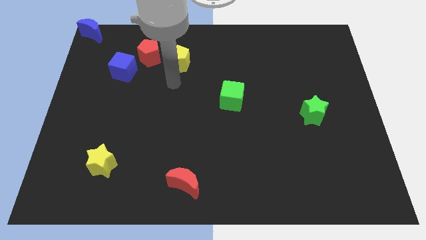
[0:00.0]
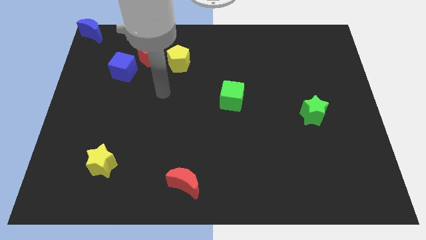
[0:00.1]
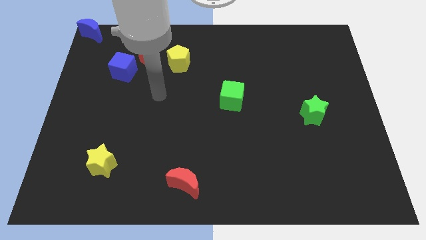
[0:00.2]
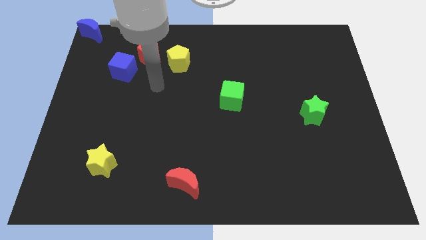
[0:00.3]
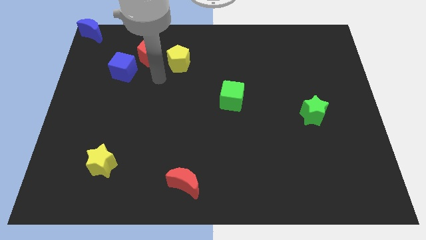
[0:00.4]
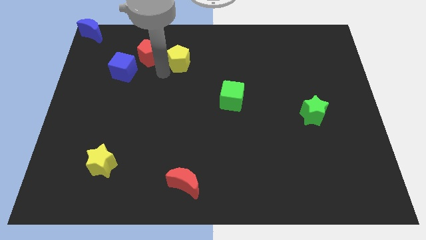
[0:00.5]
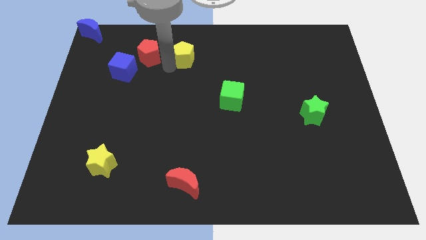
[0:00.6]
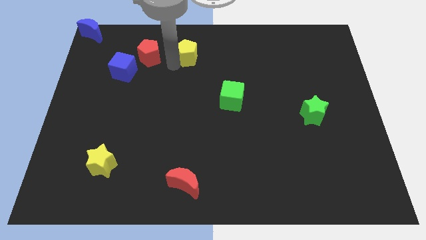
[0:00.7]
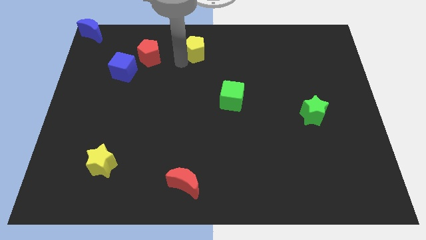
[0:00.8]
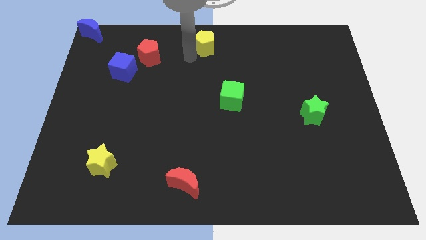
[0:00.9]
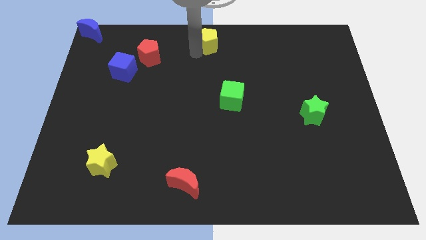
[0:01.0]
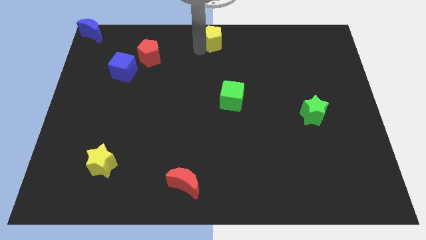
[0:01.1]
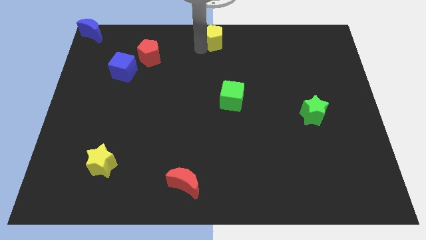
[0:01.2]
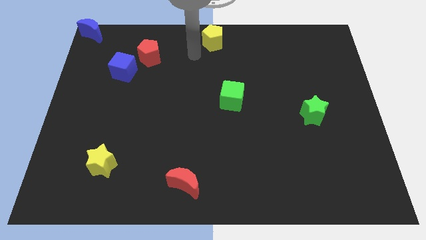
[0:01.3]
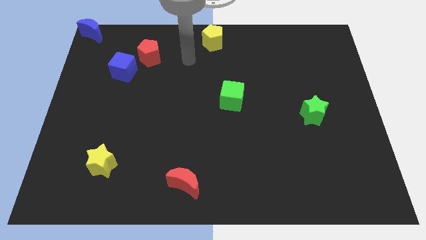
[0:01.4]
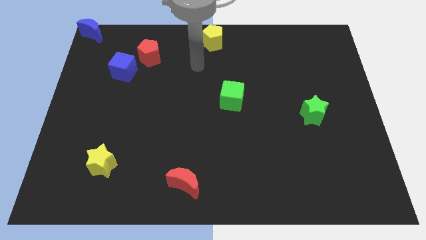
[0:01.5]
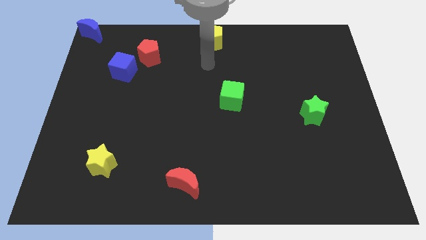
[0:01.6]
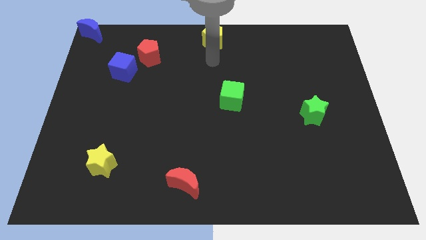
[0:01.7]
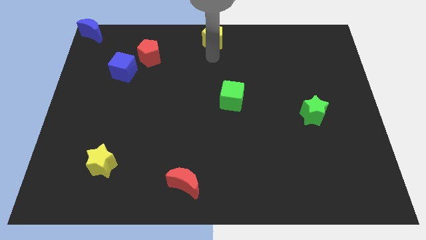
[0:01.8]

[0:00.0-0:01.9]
push the yellow pentagon towards the top center of the board

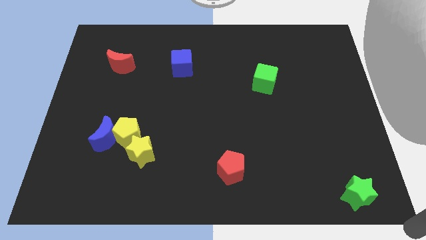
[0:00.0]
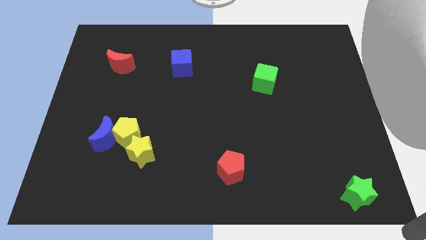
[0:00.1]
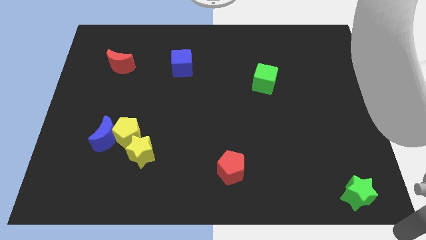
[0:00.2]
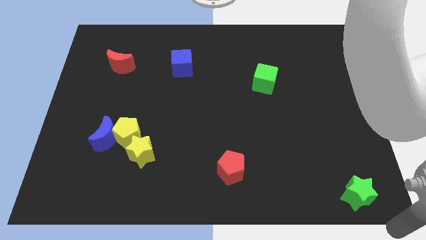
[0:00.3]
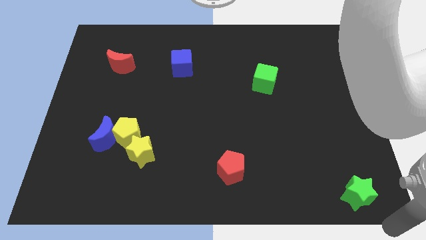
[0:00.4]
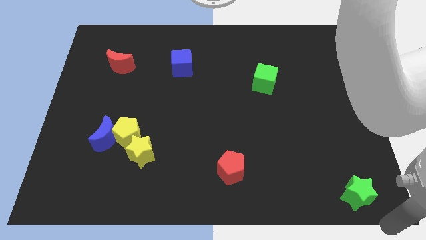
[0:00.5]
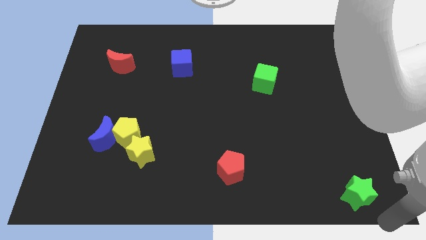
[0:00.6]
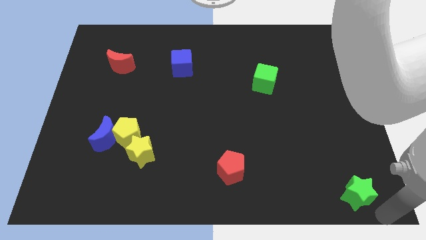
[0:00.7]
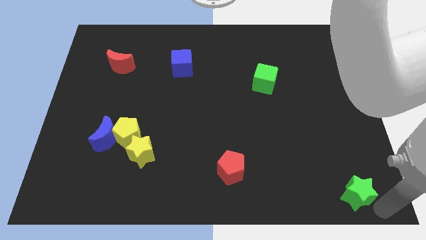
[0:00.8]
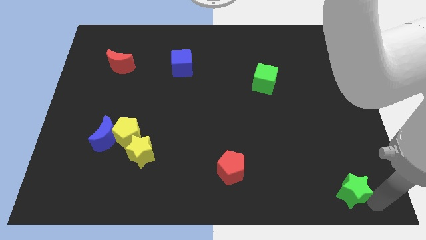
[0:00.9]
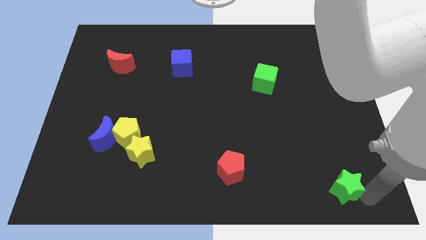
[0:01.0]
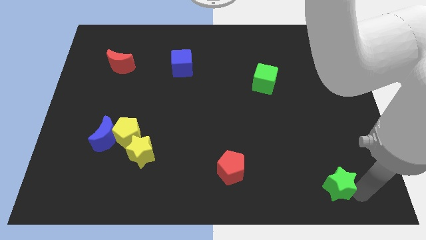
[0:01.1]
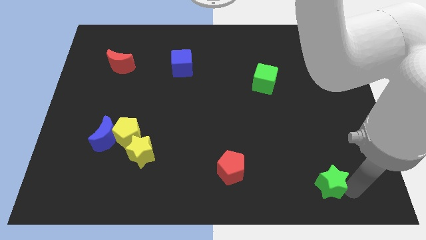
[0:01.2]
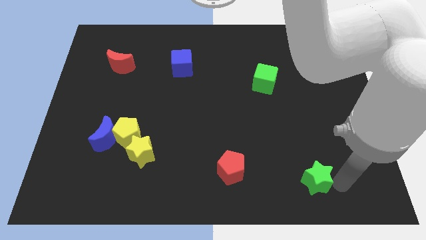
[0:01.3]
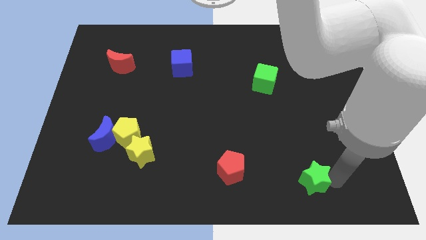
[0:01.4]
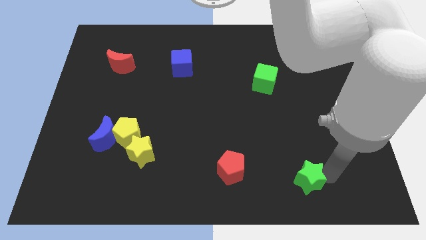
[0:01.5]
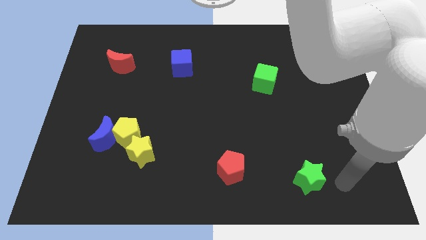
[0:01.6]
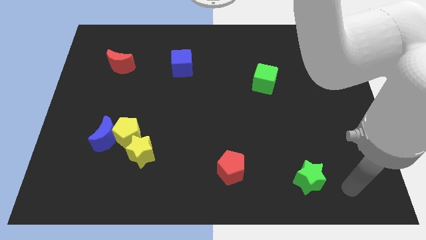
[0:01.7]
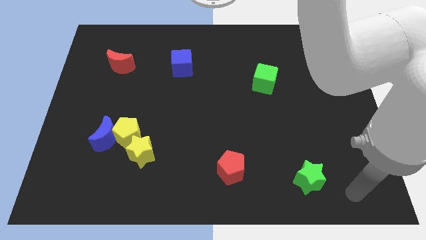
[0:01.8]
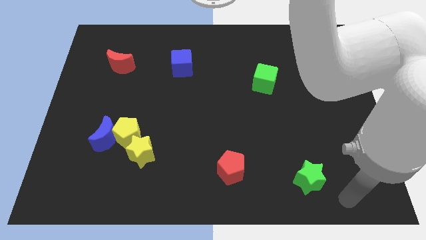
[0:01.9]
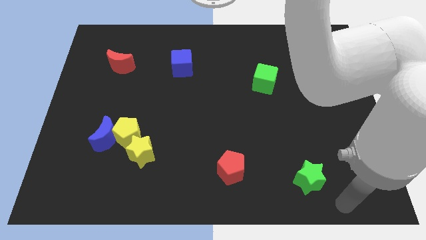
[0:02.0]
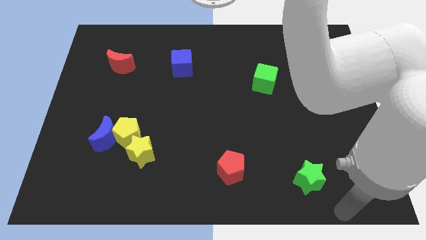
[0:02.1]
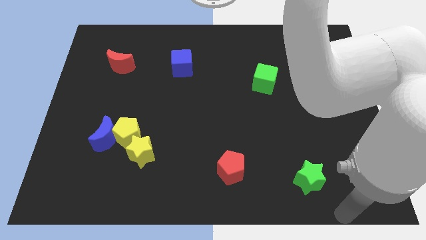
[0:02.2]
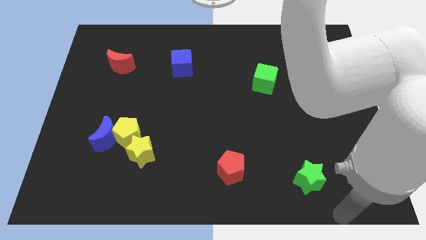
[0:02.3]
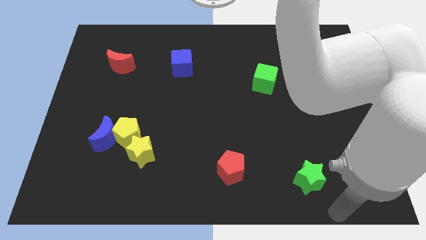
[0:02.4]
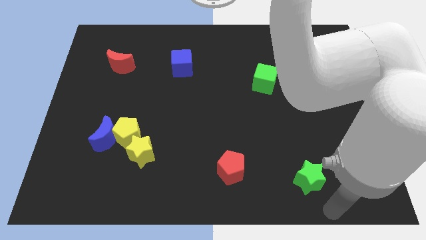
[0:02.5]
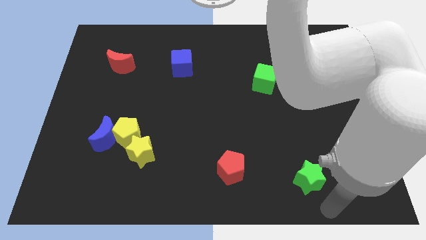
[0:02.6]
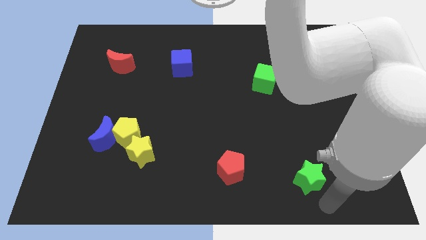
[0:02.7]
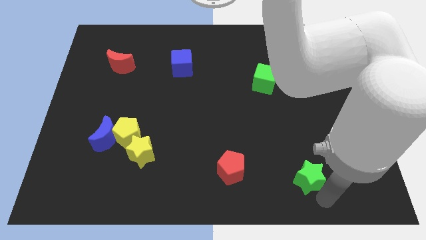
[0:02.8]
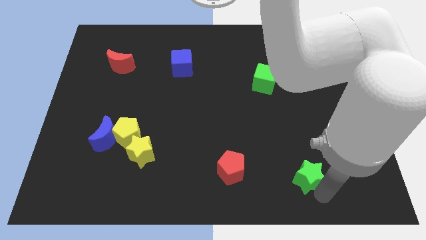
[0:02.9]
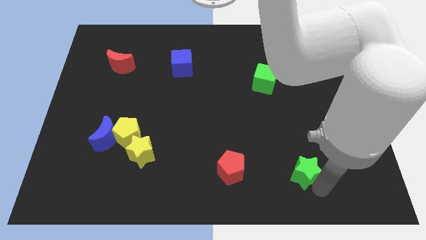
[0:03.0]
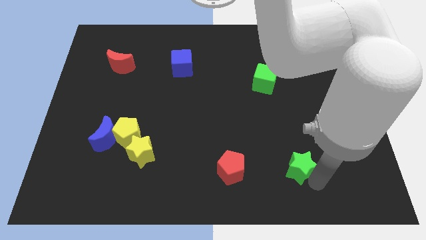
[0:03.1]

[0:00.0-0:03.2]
place the green star parallel to red pentagon

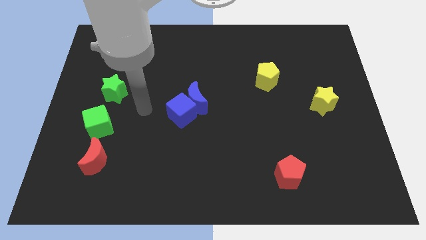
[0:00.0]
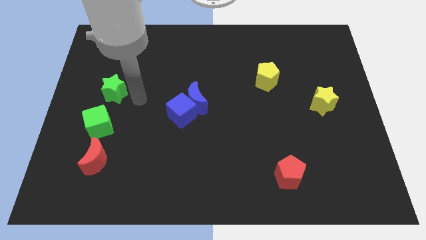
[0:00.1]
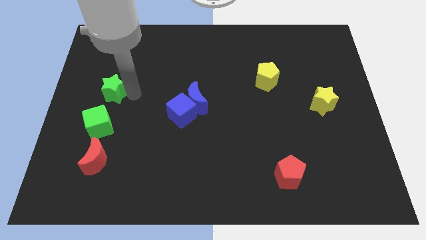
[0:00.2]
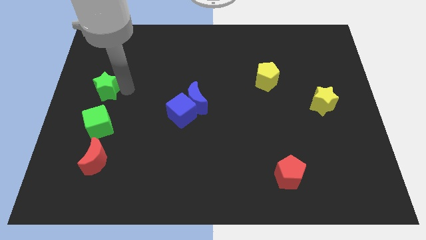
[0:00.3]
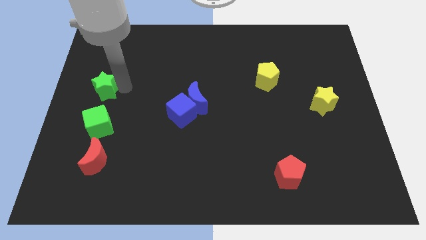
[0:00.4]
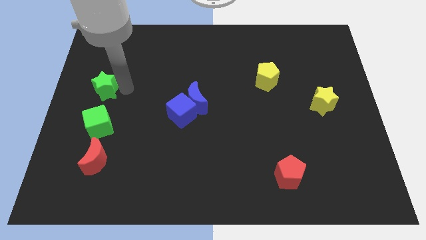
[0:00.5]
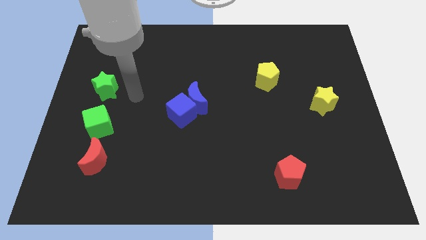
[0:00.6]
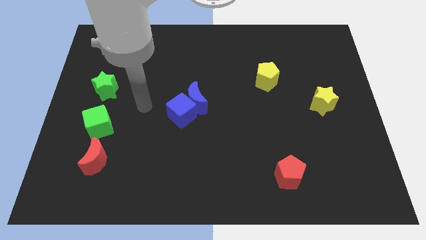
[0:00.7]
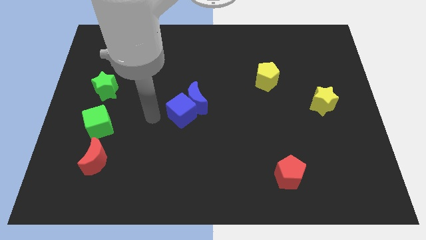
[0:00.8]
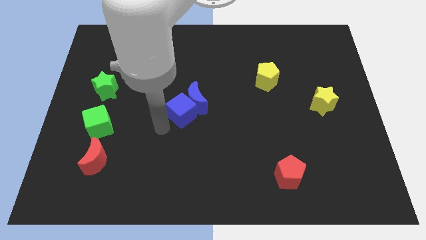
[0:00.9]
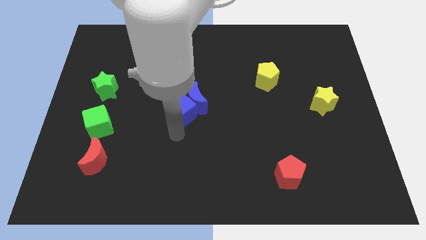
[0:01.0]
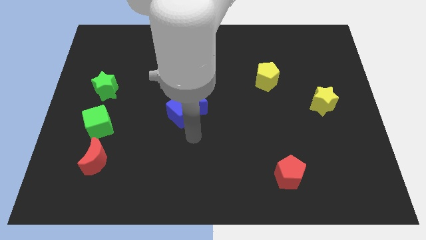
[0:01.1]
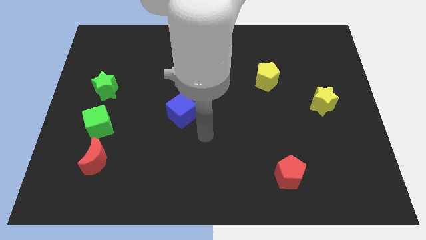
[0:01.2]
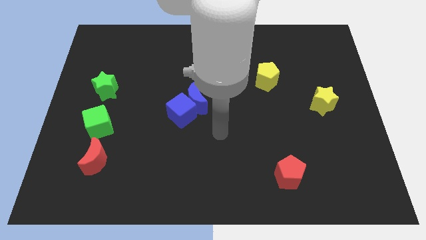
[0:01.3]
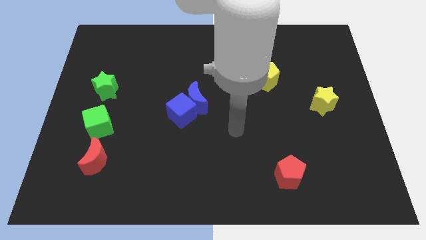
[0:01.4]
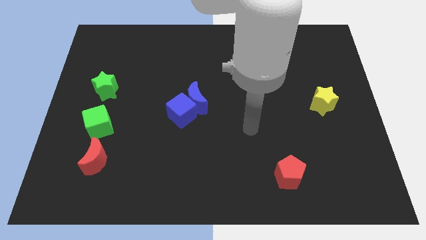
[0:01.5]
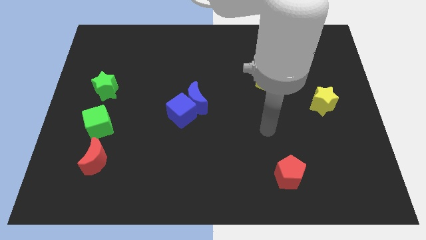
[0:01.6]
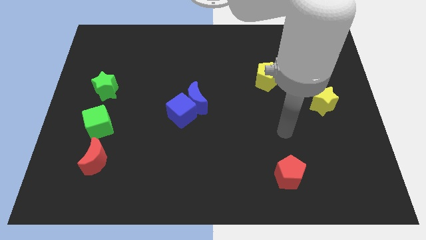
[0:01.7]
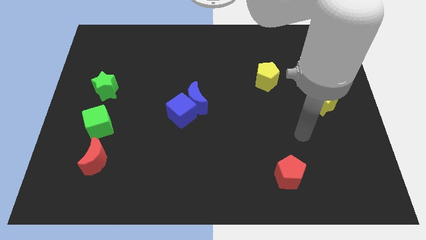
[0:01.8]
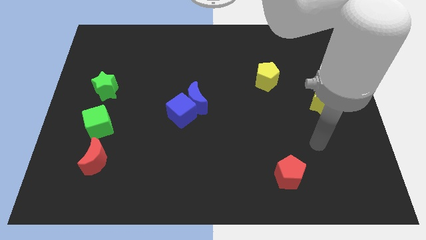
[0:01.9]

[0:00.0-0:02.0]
move the arm away from the green star

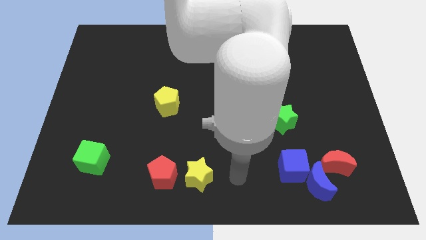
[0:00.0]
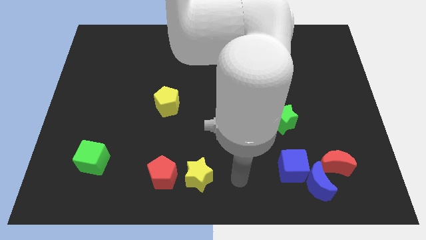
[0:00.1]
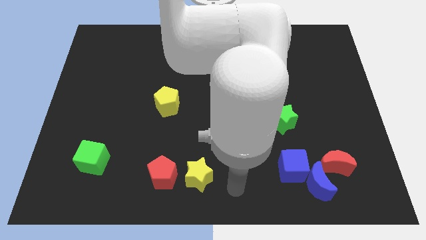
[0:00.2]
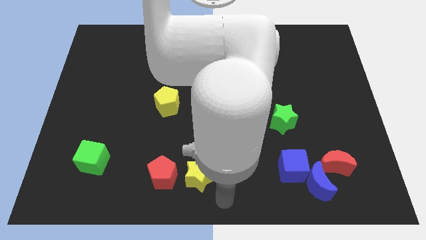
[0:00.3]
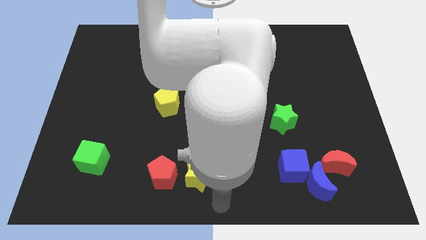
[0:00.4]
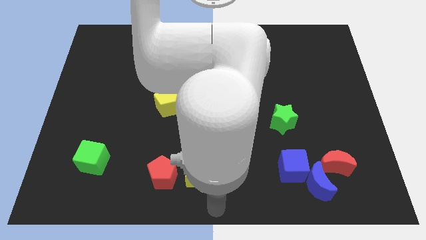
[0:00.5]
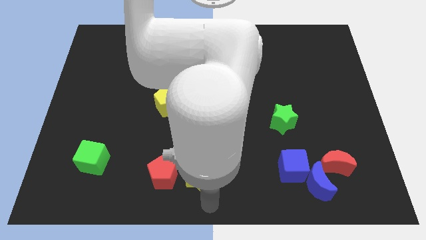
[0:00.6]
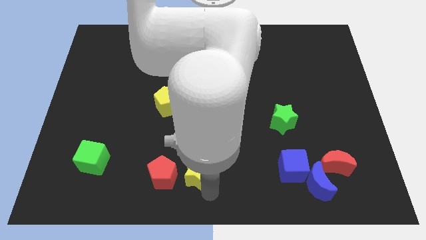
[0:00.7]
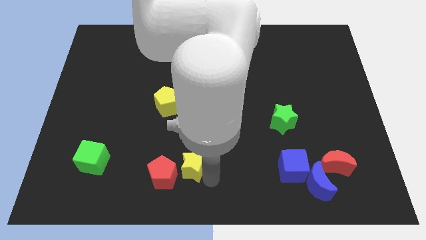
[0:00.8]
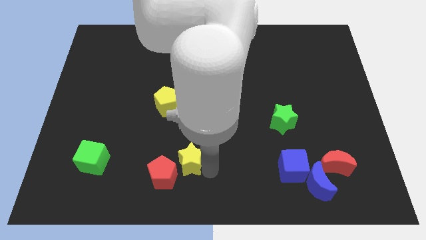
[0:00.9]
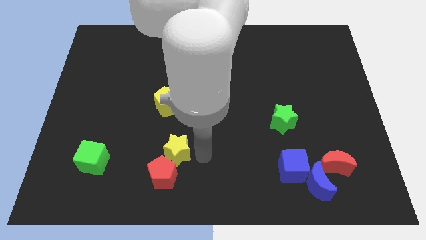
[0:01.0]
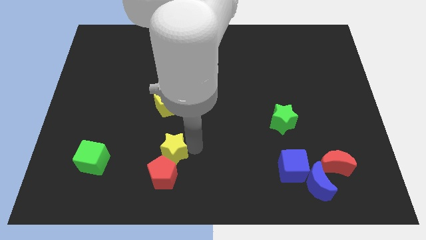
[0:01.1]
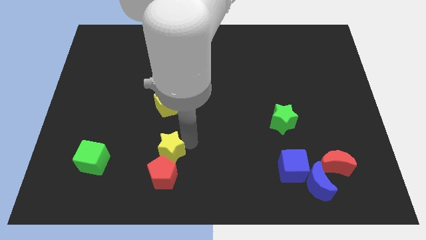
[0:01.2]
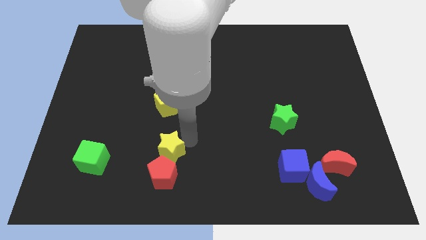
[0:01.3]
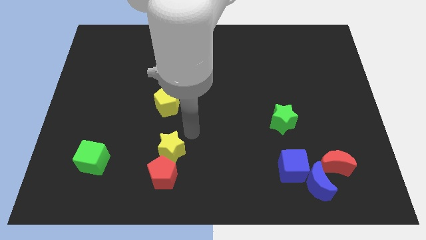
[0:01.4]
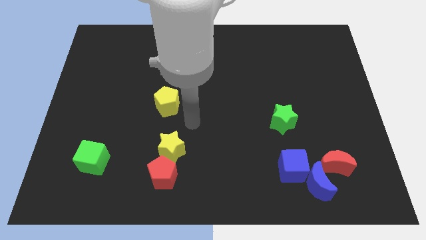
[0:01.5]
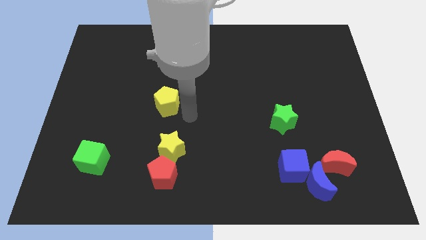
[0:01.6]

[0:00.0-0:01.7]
place the yellow star above the red pentagon

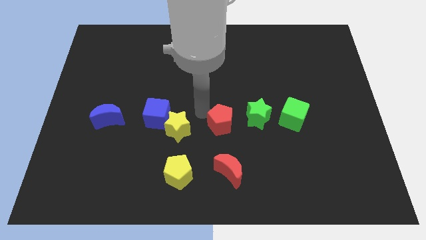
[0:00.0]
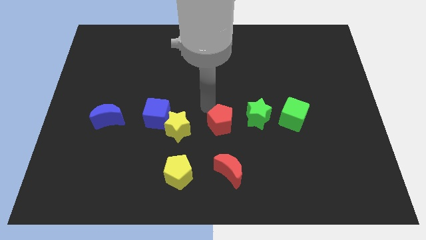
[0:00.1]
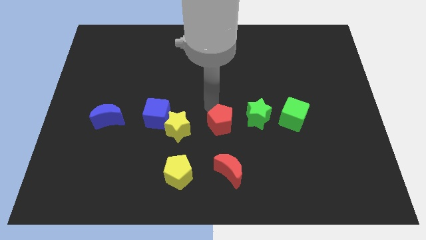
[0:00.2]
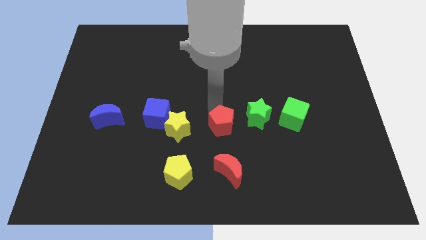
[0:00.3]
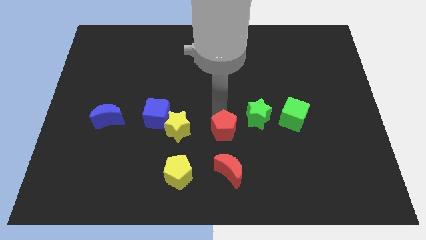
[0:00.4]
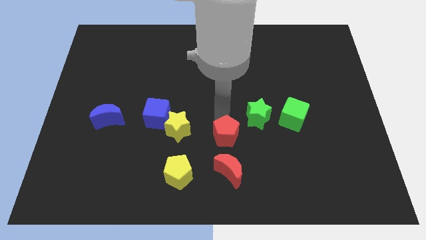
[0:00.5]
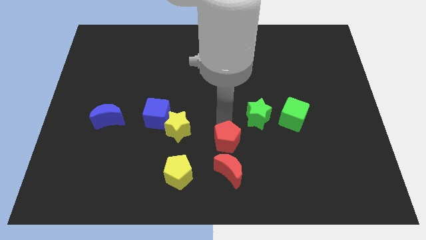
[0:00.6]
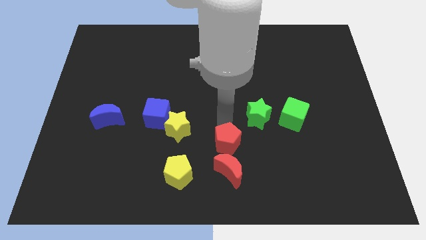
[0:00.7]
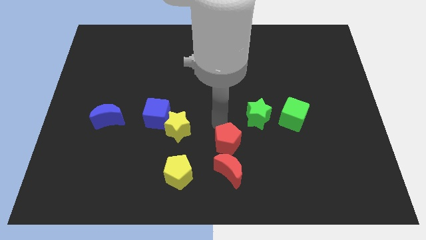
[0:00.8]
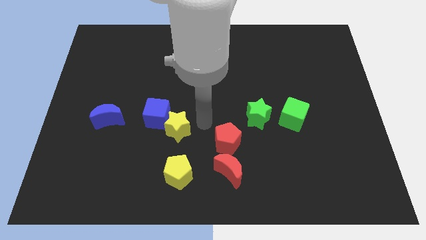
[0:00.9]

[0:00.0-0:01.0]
push the red pentagon towards the red crescent
